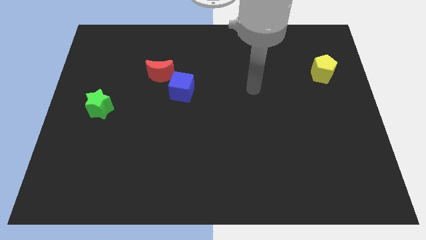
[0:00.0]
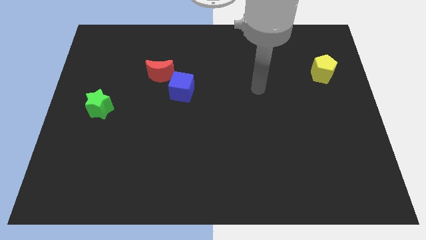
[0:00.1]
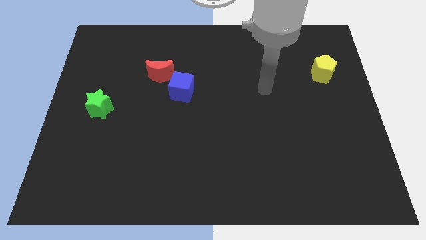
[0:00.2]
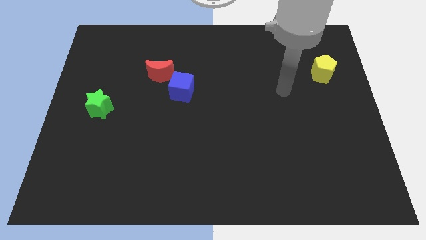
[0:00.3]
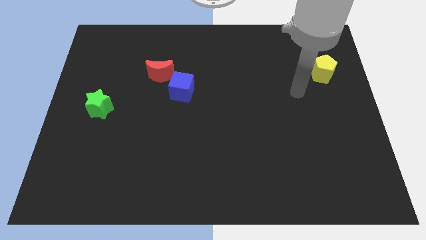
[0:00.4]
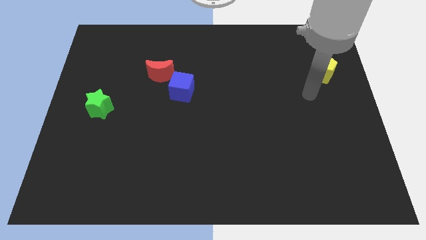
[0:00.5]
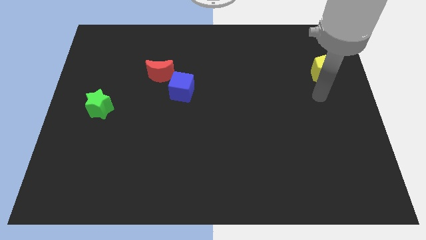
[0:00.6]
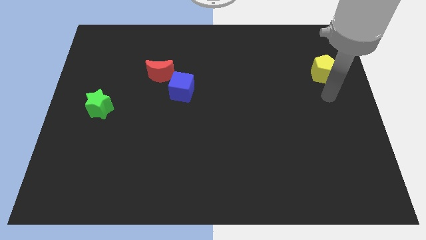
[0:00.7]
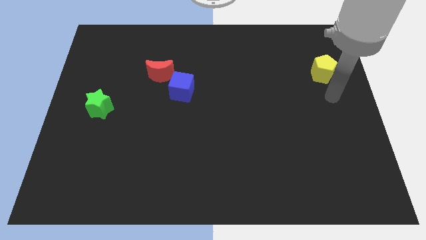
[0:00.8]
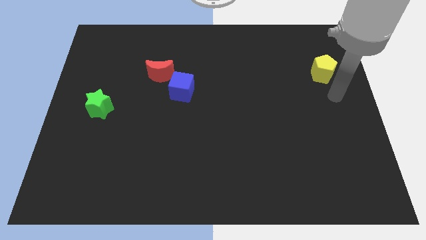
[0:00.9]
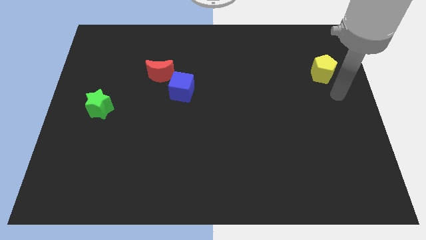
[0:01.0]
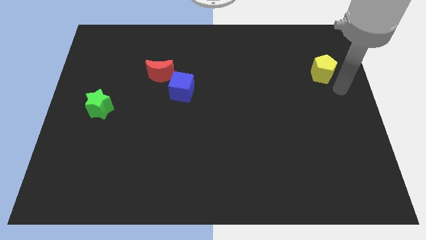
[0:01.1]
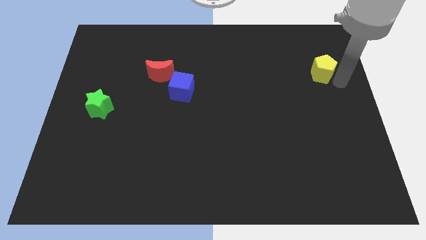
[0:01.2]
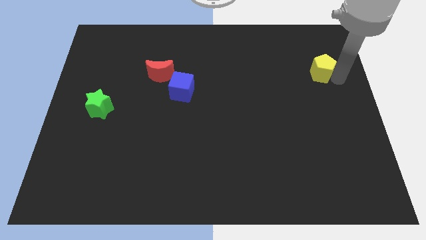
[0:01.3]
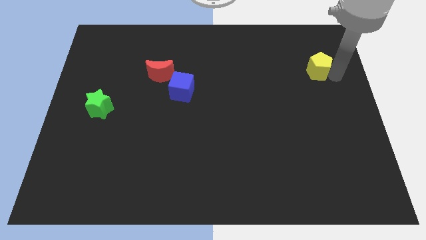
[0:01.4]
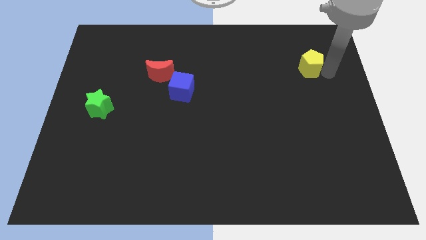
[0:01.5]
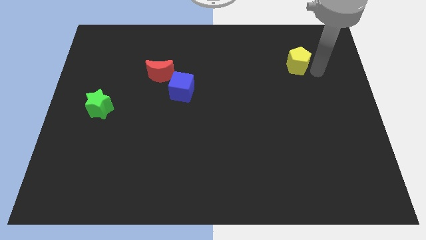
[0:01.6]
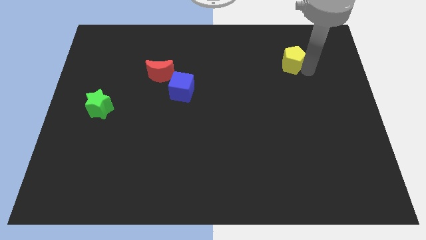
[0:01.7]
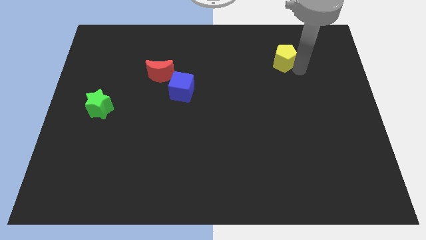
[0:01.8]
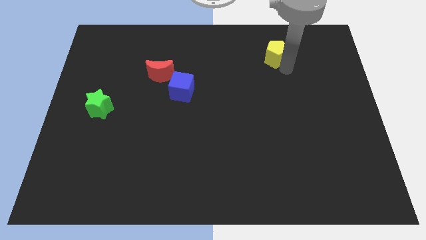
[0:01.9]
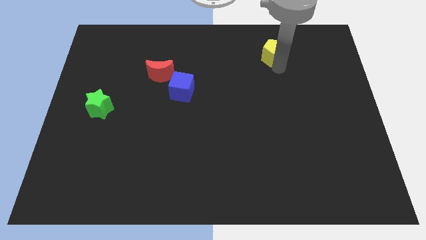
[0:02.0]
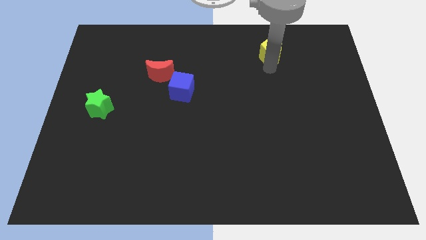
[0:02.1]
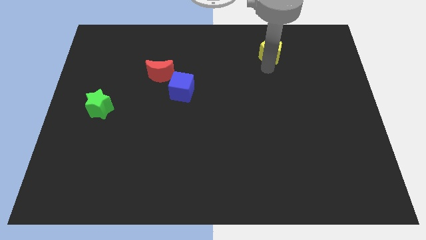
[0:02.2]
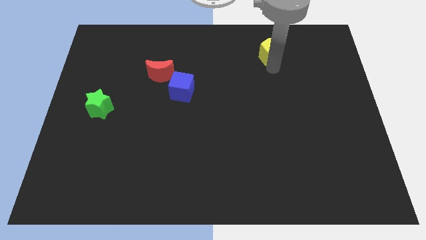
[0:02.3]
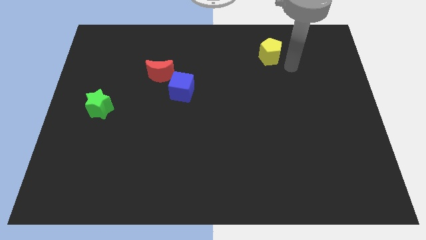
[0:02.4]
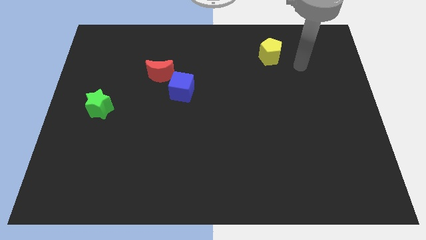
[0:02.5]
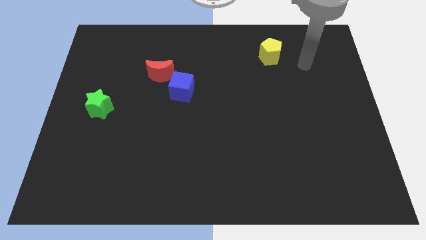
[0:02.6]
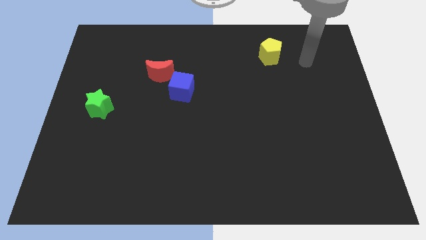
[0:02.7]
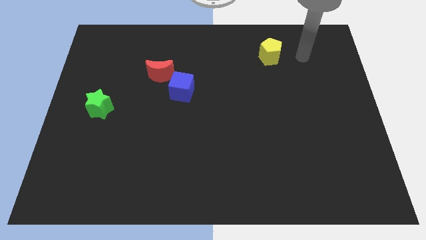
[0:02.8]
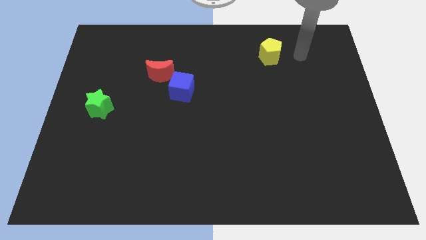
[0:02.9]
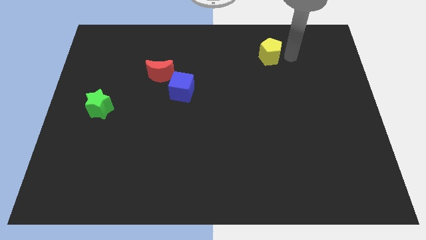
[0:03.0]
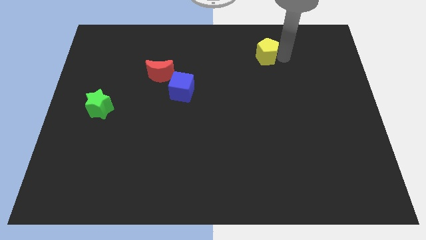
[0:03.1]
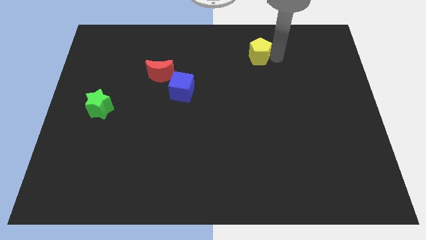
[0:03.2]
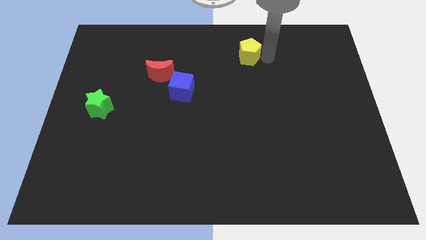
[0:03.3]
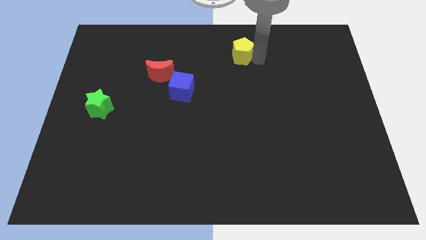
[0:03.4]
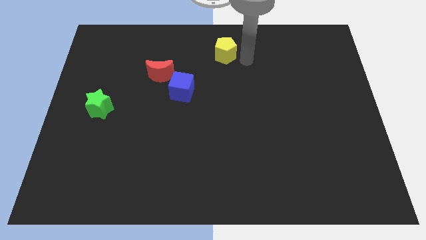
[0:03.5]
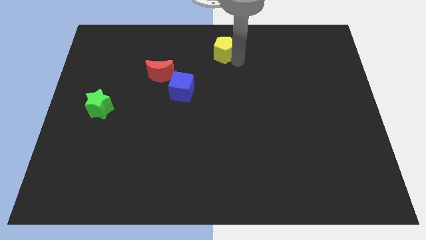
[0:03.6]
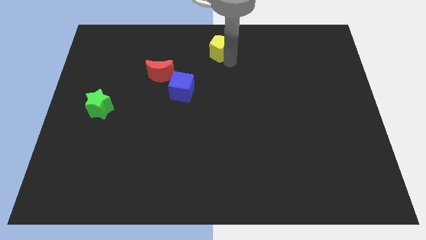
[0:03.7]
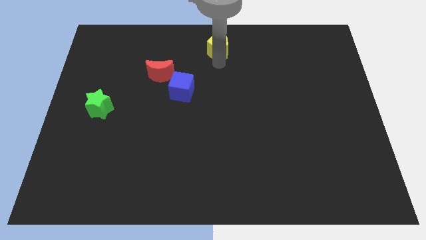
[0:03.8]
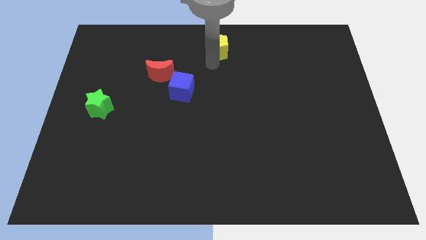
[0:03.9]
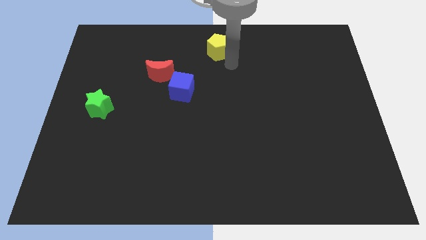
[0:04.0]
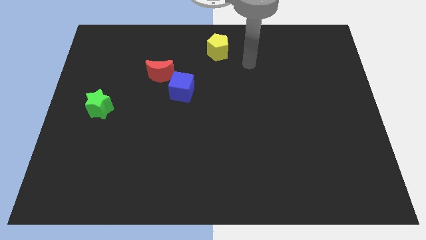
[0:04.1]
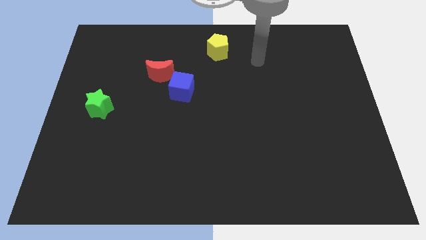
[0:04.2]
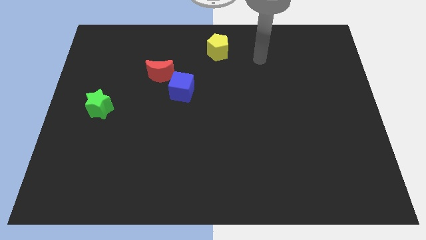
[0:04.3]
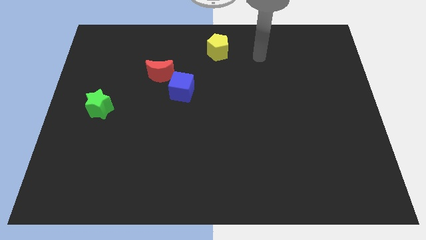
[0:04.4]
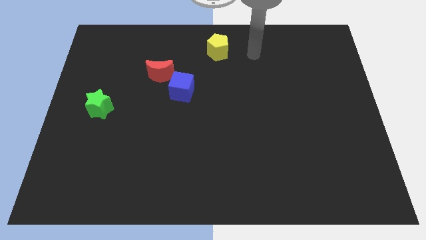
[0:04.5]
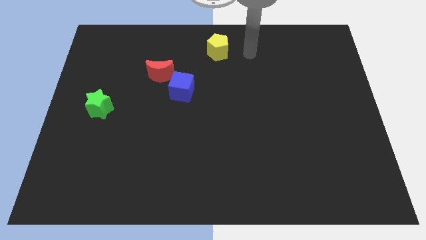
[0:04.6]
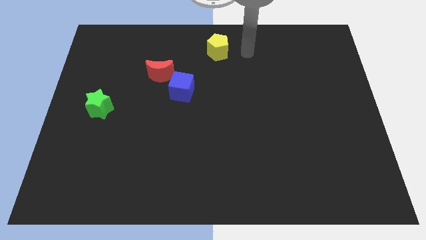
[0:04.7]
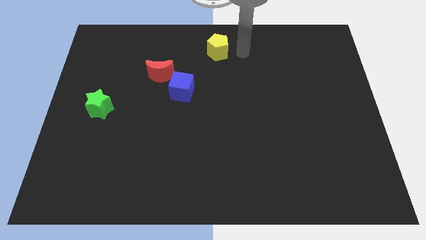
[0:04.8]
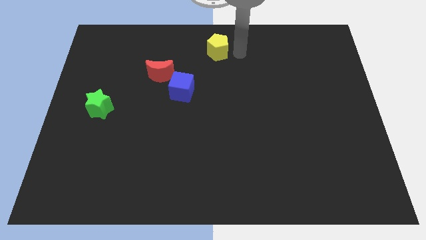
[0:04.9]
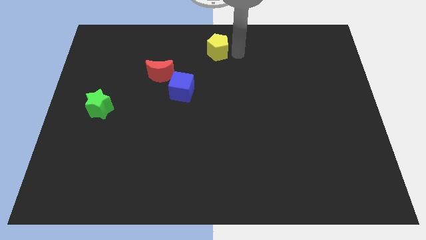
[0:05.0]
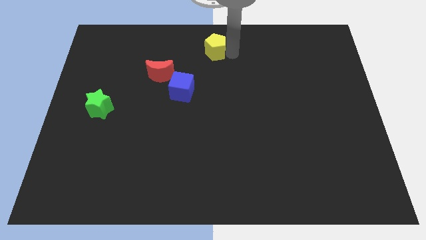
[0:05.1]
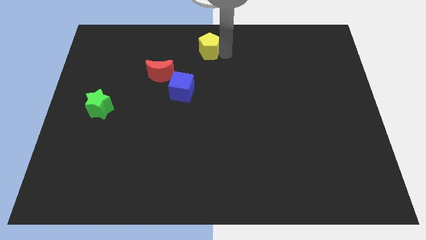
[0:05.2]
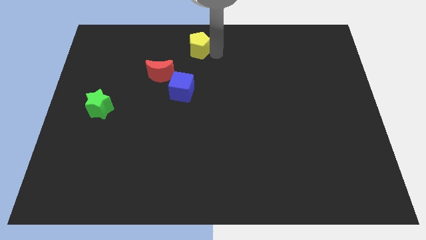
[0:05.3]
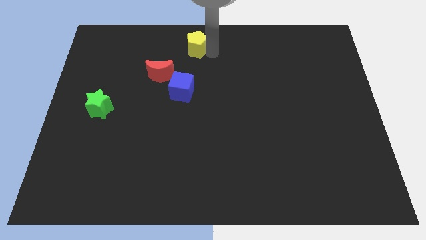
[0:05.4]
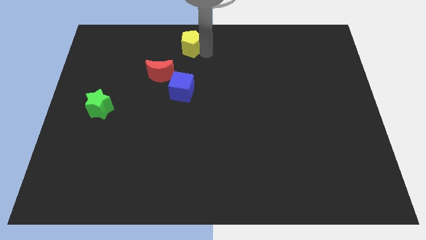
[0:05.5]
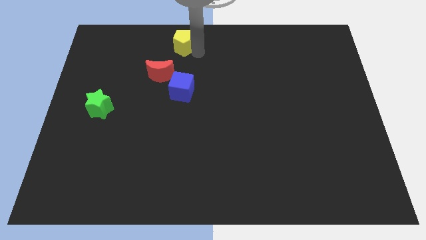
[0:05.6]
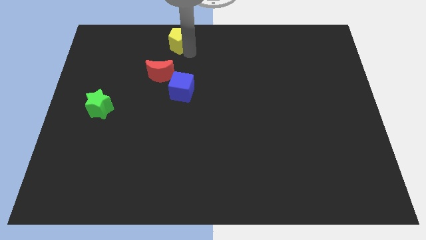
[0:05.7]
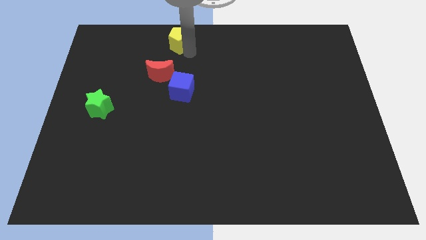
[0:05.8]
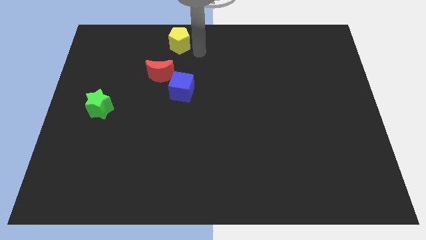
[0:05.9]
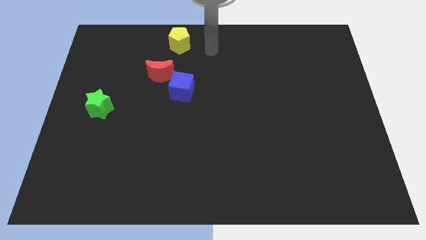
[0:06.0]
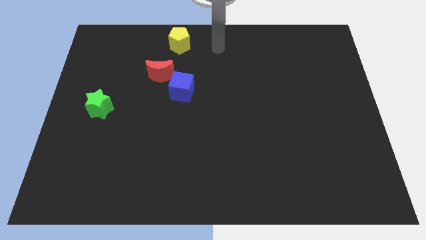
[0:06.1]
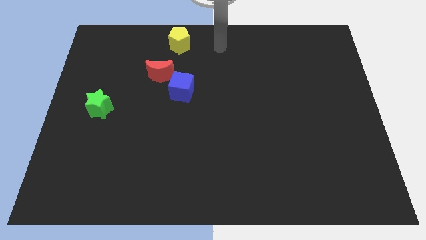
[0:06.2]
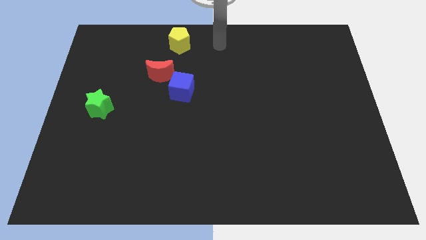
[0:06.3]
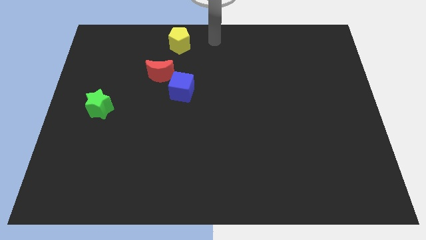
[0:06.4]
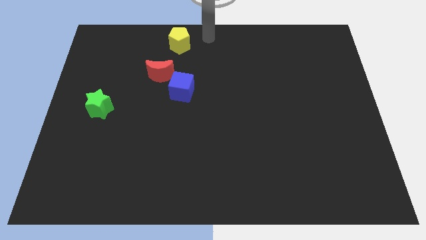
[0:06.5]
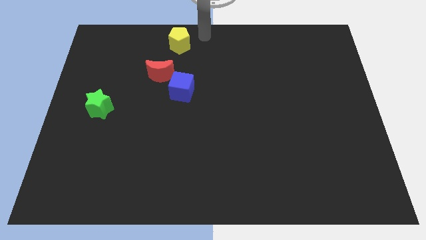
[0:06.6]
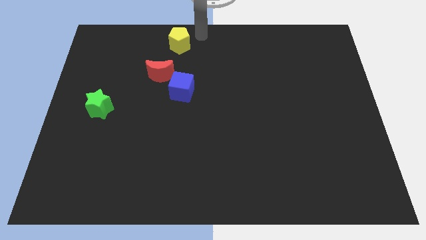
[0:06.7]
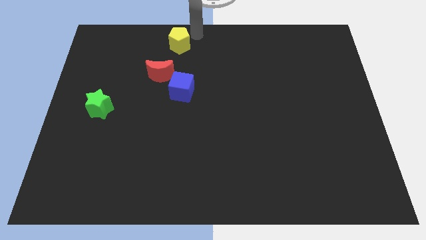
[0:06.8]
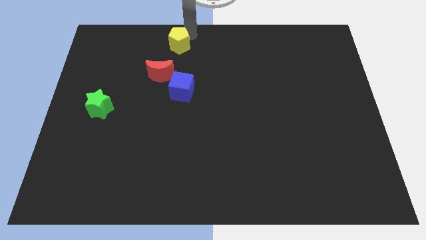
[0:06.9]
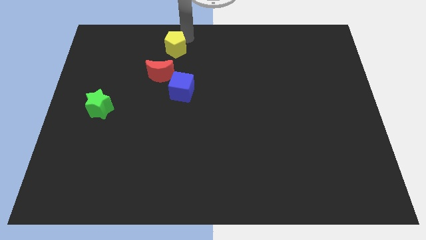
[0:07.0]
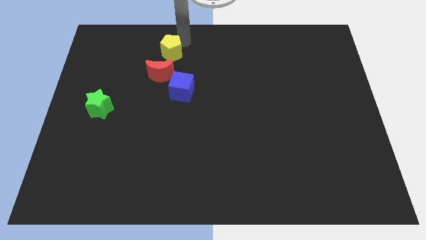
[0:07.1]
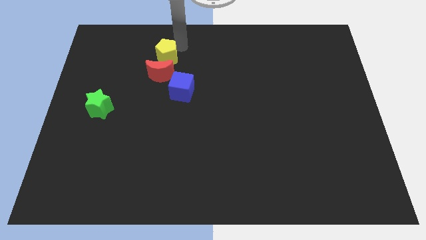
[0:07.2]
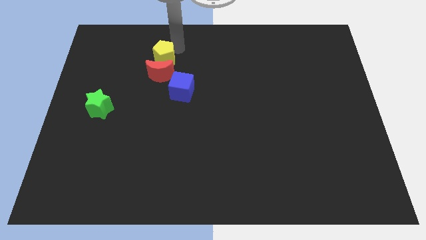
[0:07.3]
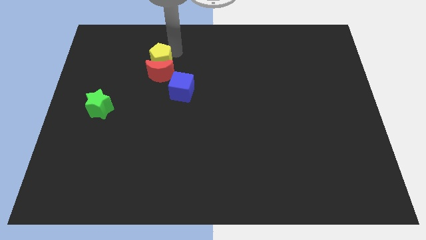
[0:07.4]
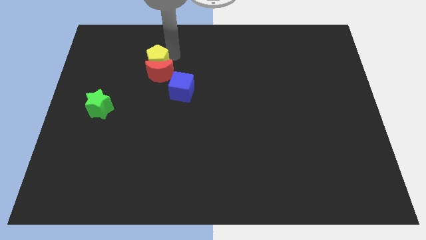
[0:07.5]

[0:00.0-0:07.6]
slide the yellow block towards the red block

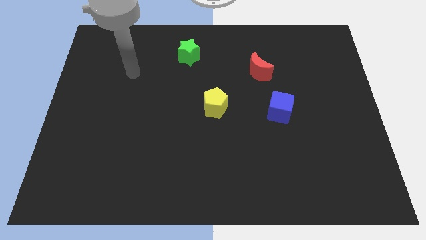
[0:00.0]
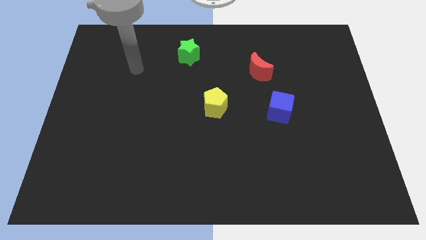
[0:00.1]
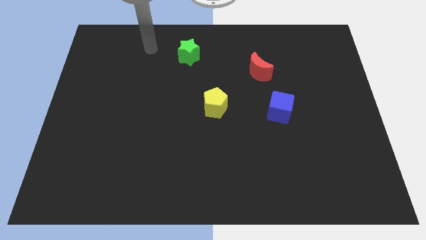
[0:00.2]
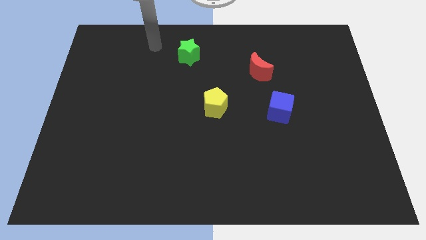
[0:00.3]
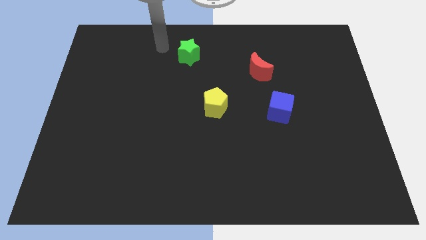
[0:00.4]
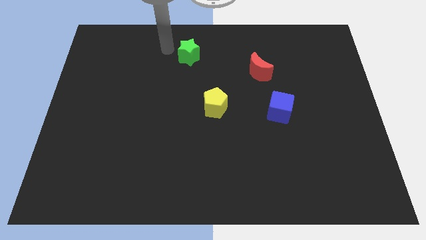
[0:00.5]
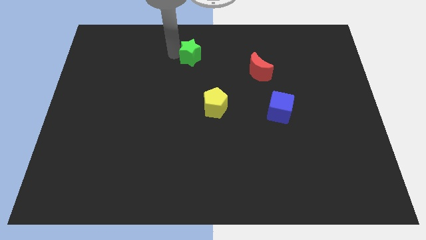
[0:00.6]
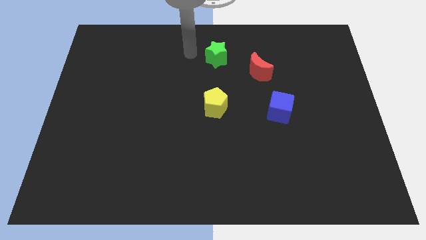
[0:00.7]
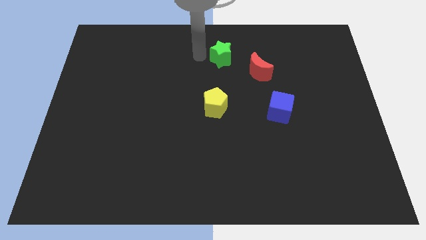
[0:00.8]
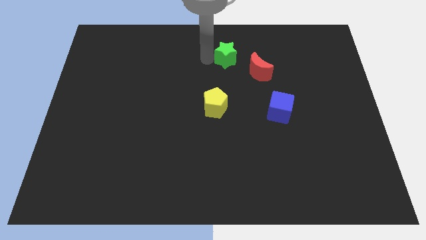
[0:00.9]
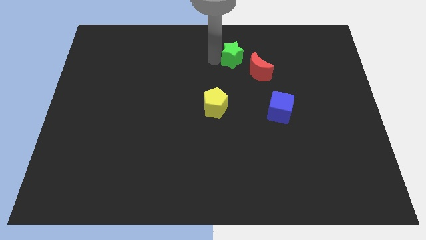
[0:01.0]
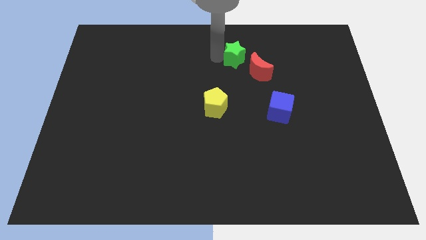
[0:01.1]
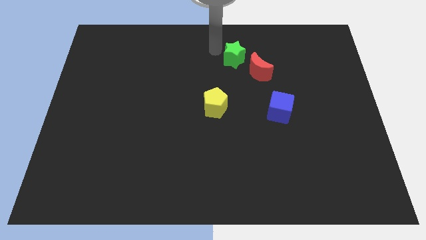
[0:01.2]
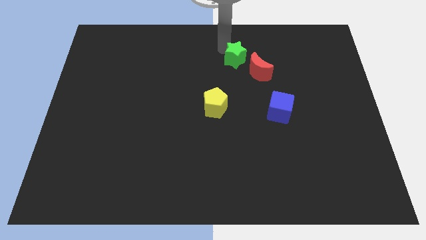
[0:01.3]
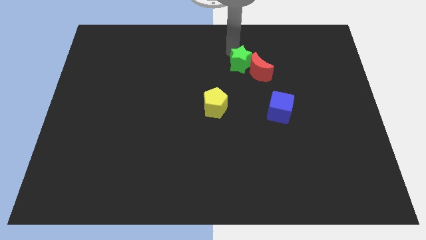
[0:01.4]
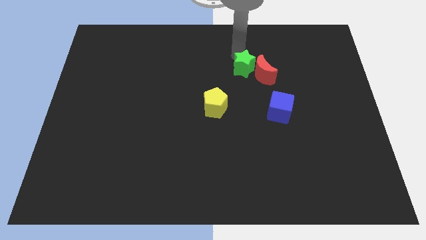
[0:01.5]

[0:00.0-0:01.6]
move the green block next to the red block
